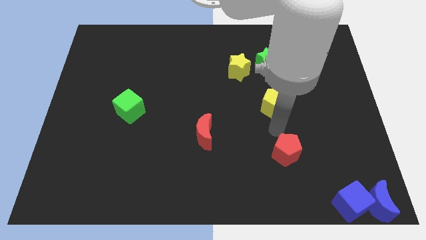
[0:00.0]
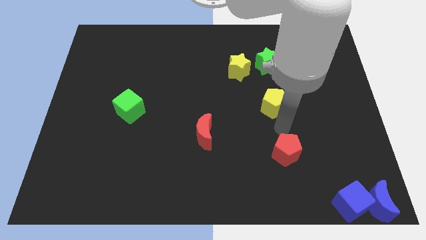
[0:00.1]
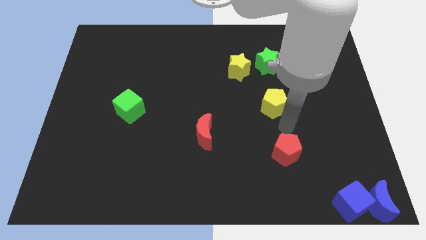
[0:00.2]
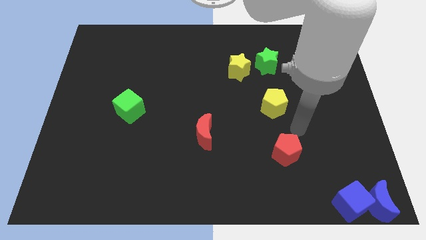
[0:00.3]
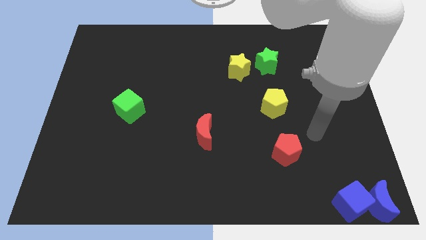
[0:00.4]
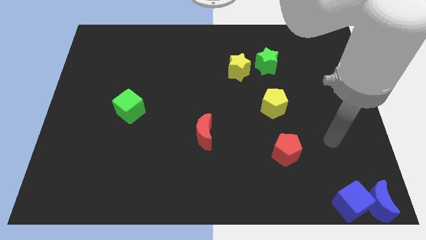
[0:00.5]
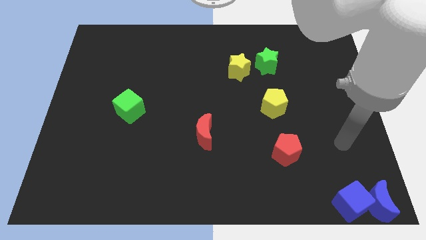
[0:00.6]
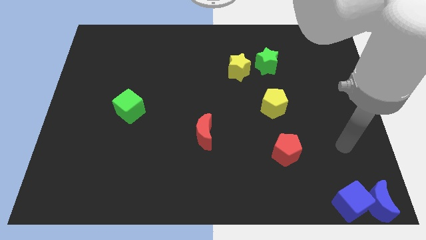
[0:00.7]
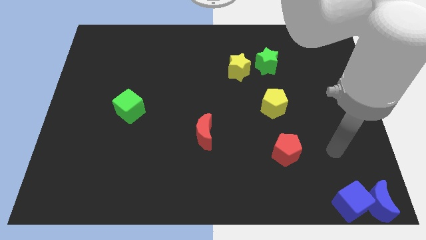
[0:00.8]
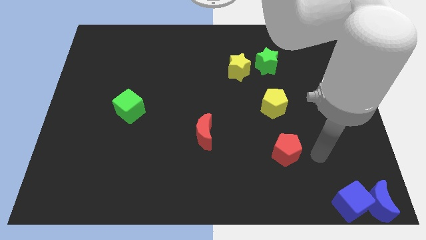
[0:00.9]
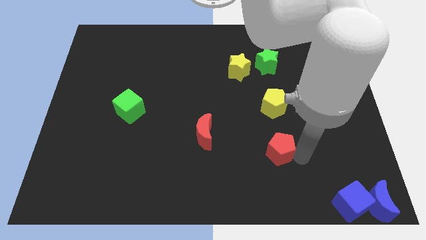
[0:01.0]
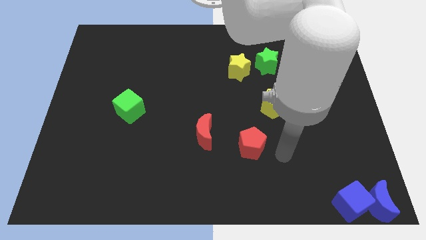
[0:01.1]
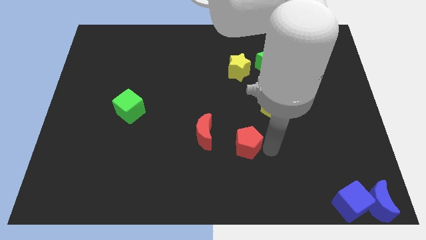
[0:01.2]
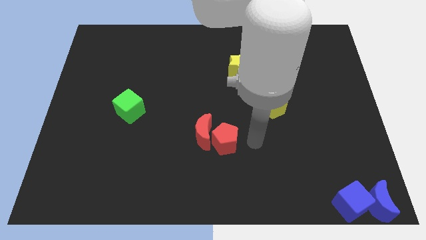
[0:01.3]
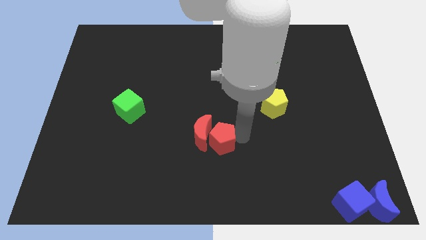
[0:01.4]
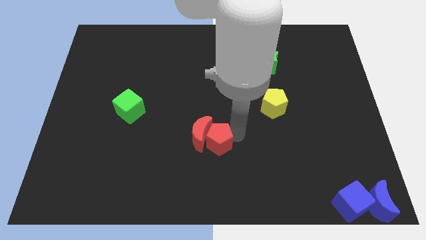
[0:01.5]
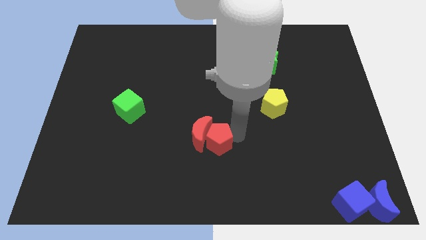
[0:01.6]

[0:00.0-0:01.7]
push the red pentagon into the red moon

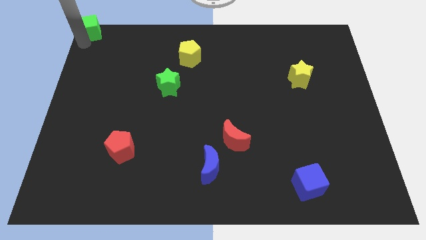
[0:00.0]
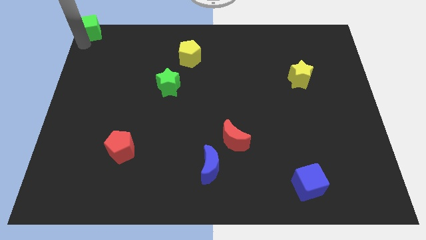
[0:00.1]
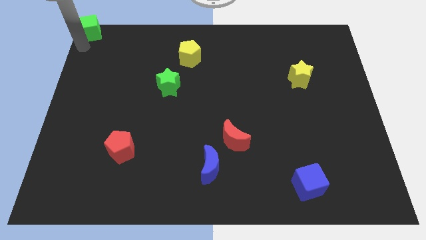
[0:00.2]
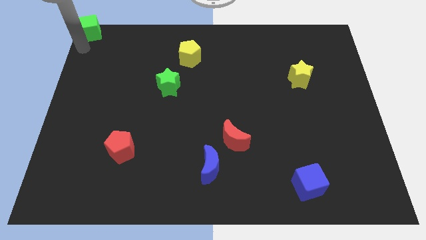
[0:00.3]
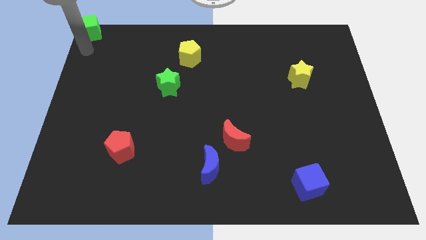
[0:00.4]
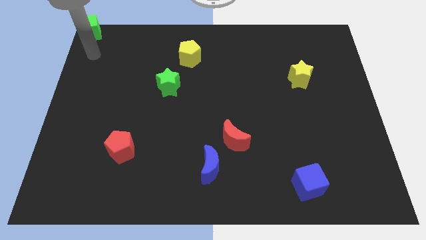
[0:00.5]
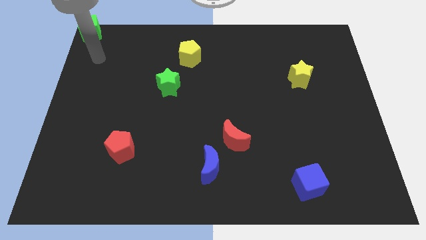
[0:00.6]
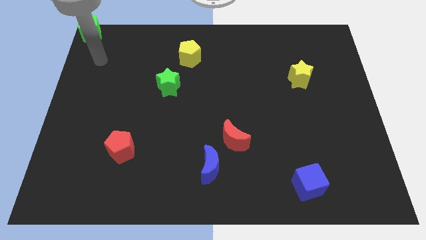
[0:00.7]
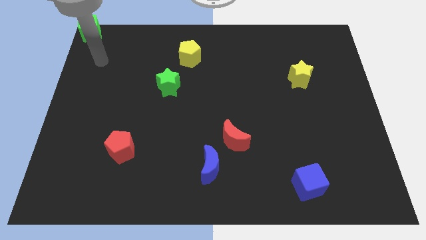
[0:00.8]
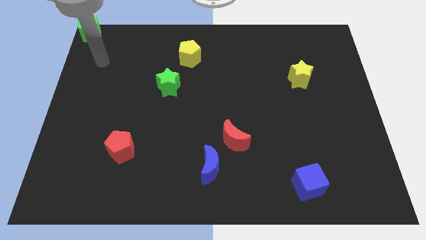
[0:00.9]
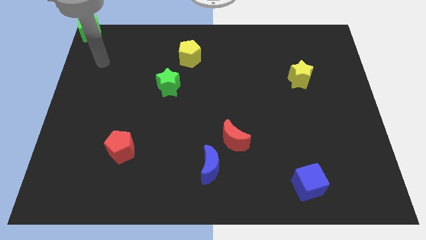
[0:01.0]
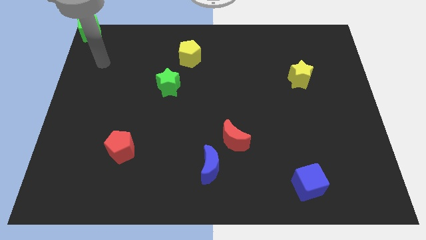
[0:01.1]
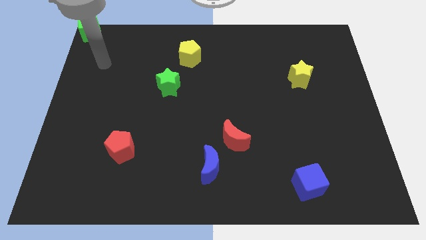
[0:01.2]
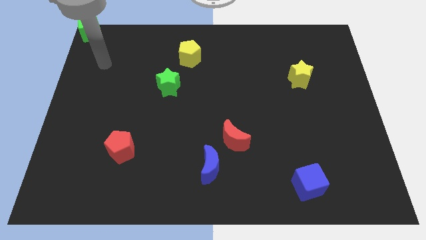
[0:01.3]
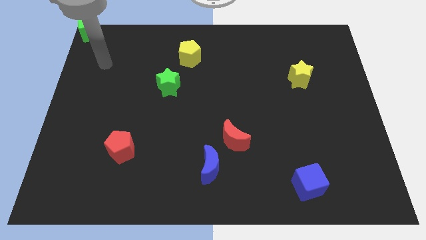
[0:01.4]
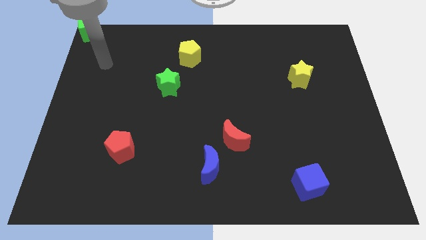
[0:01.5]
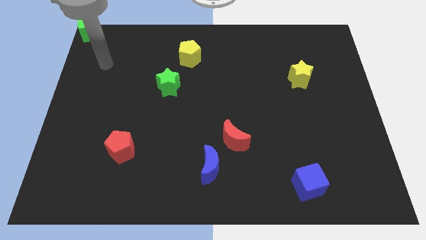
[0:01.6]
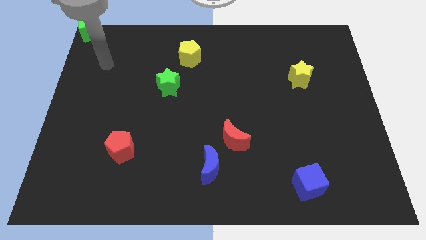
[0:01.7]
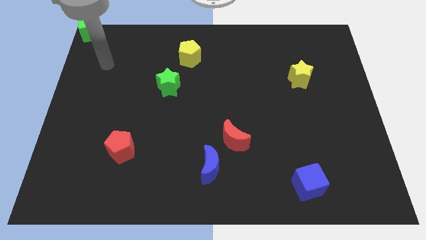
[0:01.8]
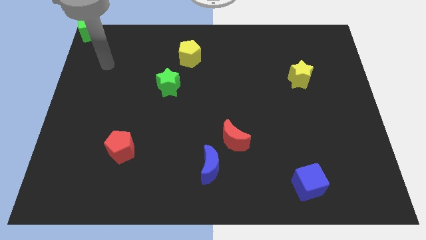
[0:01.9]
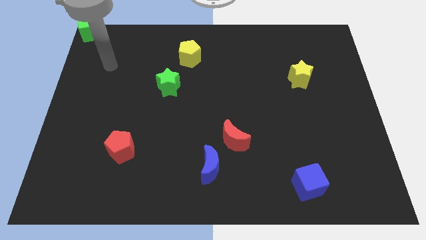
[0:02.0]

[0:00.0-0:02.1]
move your arm away from the green cube

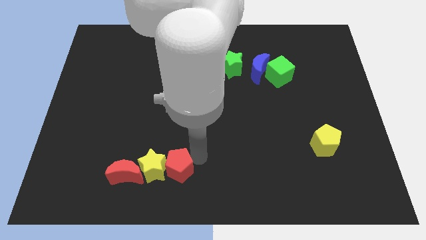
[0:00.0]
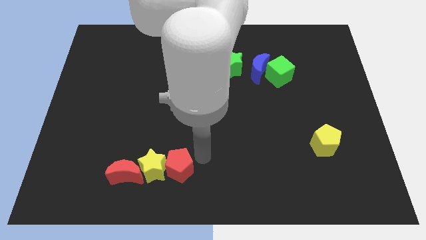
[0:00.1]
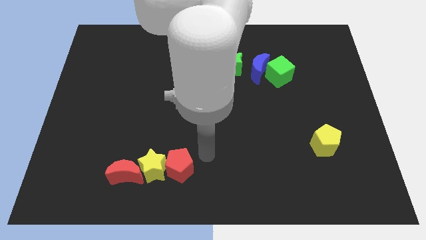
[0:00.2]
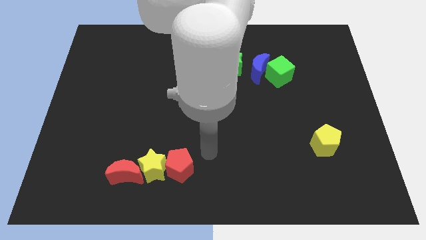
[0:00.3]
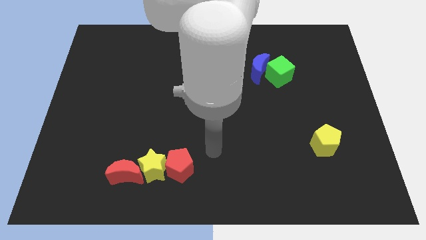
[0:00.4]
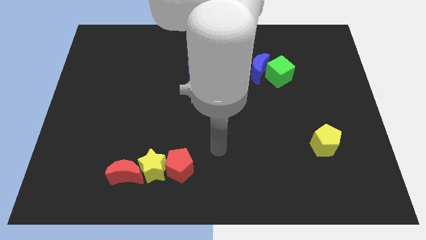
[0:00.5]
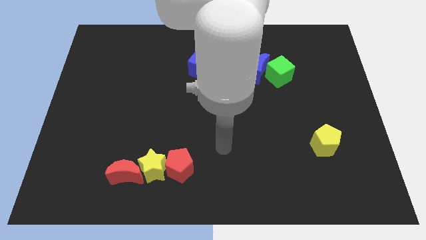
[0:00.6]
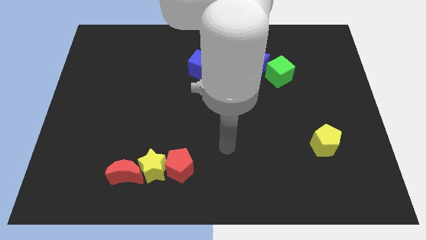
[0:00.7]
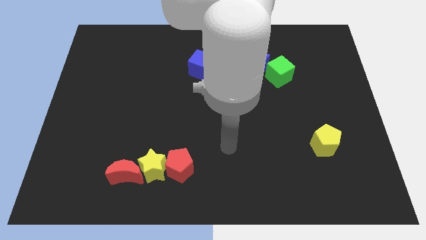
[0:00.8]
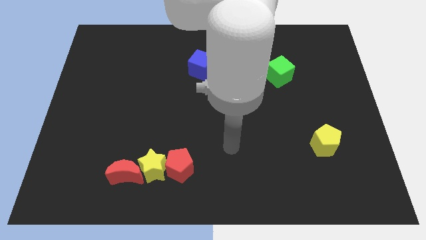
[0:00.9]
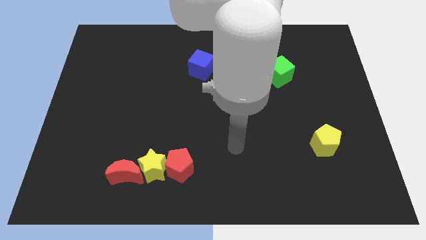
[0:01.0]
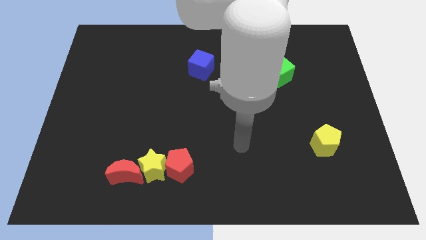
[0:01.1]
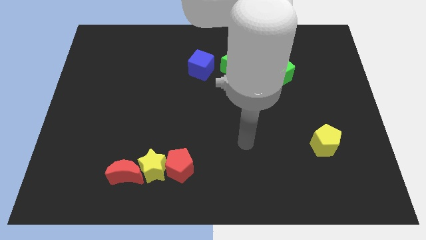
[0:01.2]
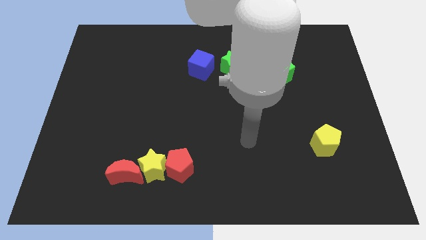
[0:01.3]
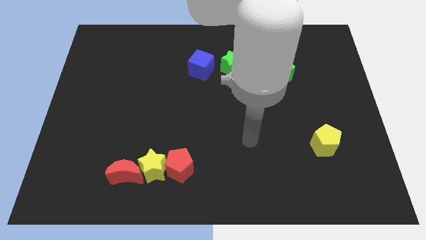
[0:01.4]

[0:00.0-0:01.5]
move your arm away from the red pentagon

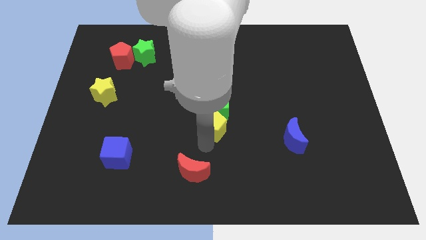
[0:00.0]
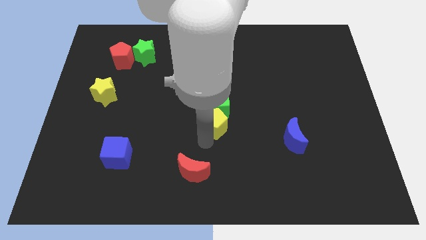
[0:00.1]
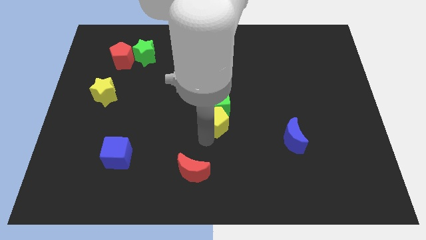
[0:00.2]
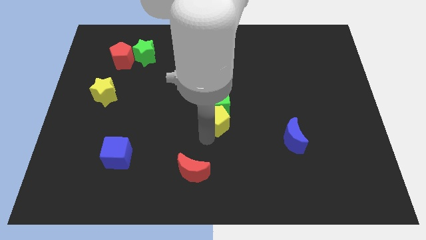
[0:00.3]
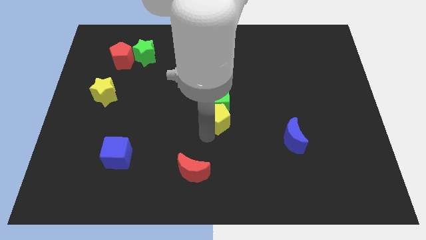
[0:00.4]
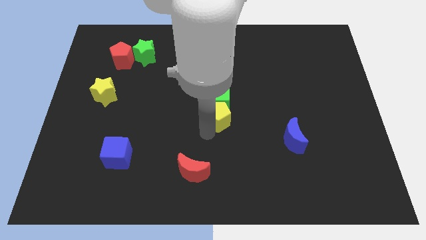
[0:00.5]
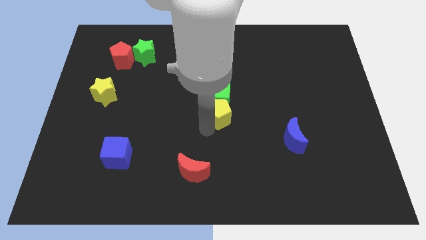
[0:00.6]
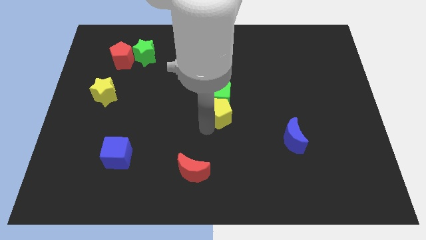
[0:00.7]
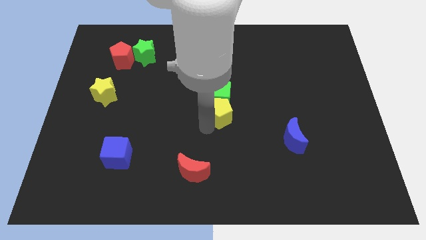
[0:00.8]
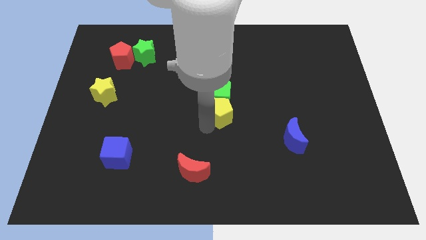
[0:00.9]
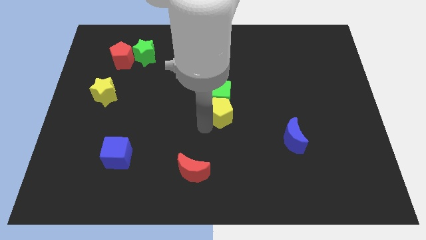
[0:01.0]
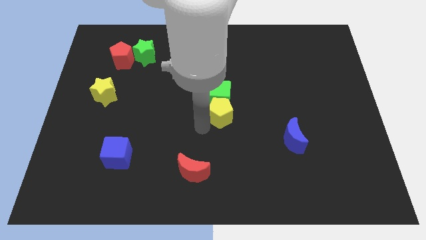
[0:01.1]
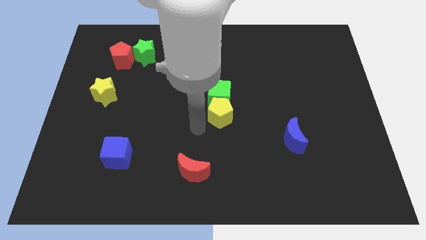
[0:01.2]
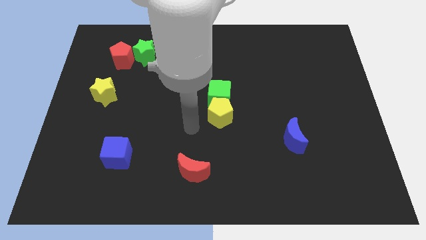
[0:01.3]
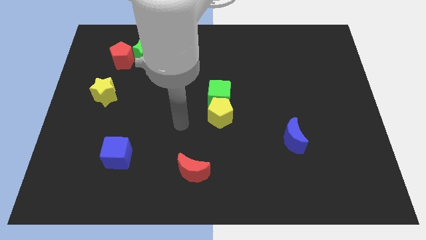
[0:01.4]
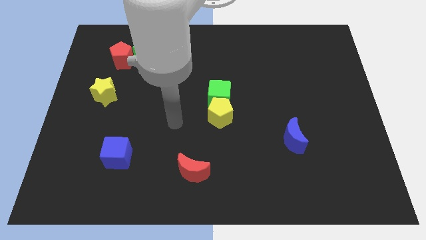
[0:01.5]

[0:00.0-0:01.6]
move the yellow pentagon along with green cube towards the top side

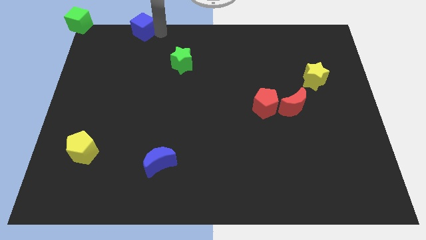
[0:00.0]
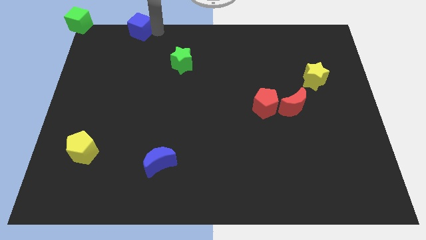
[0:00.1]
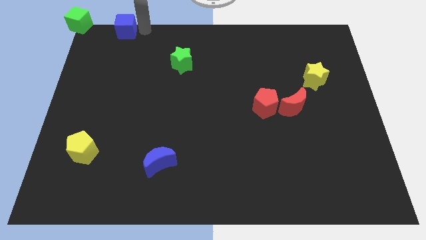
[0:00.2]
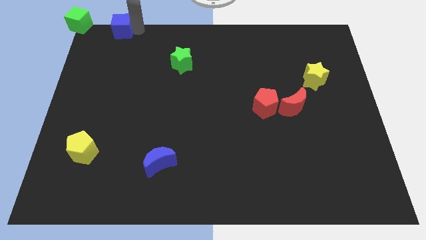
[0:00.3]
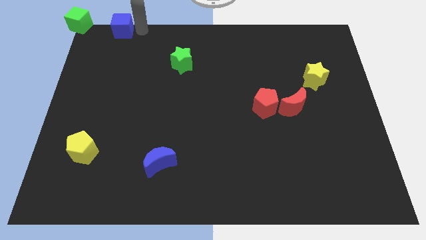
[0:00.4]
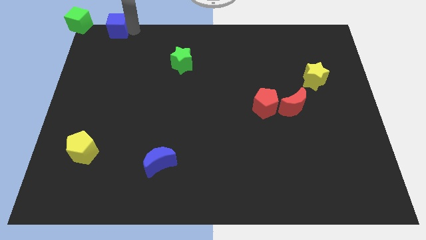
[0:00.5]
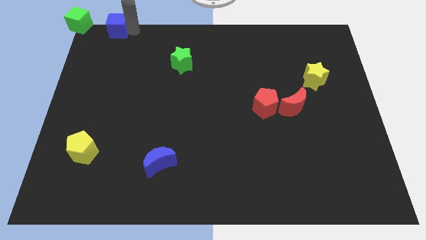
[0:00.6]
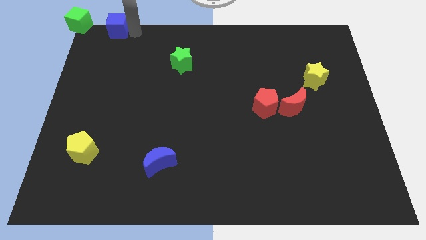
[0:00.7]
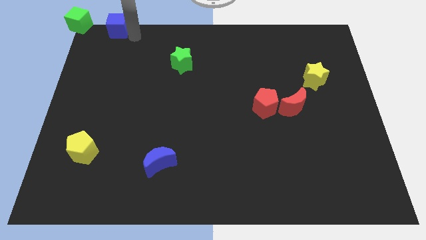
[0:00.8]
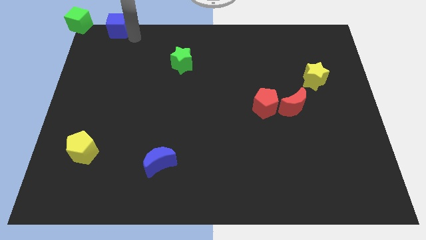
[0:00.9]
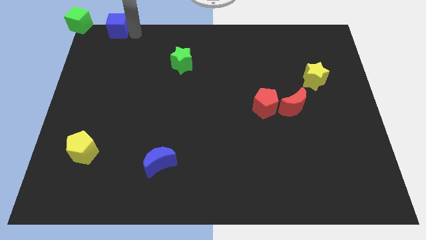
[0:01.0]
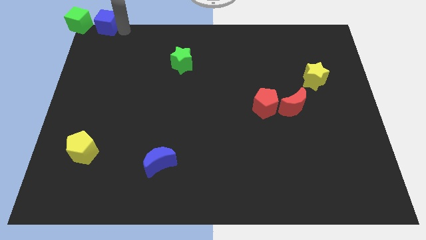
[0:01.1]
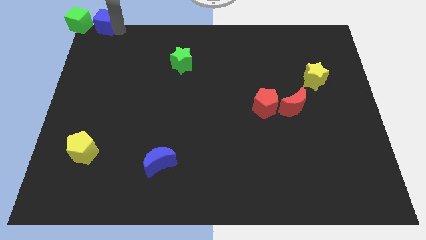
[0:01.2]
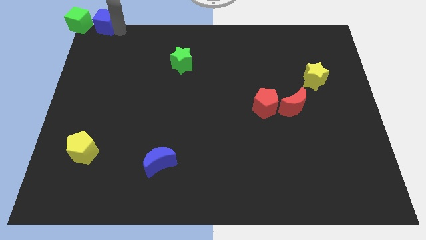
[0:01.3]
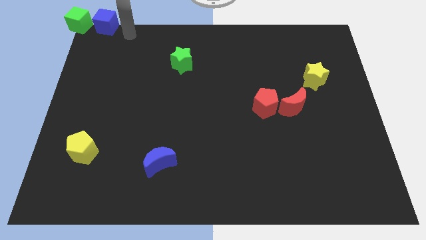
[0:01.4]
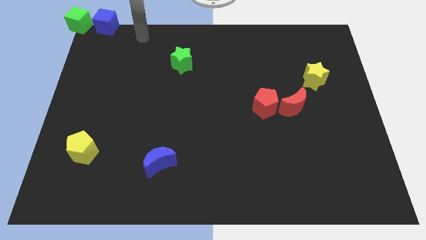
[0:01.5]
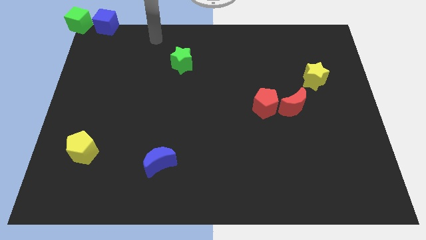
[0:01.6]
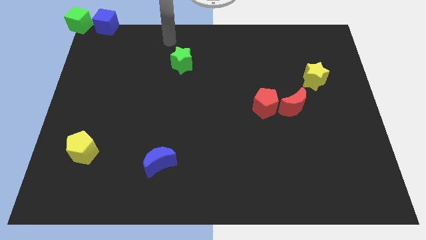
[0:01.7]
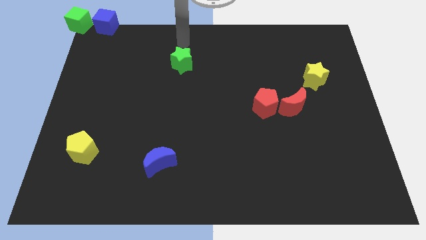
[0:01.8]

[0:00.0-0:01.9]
push the blue cube to the right side of the green star
